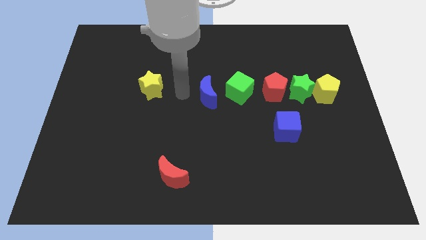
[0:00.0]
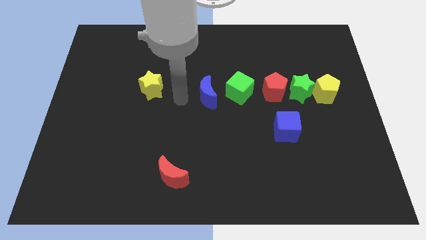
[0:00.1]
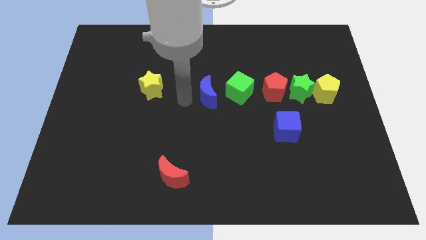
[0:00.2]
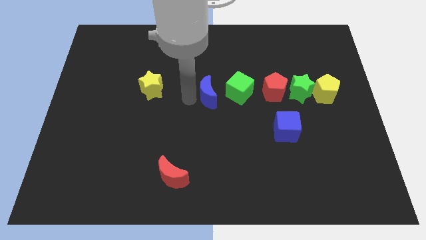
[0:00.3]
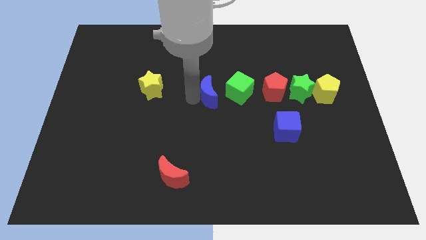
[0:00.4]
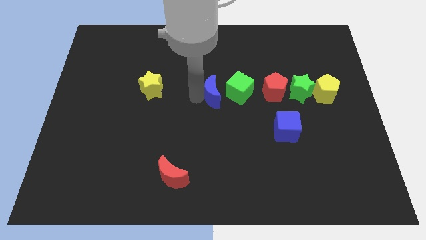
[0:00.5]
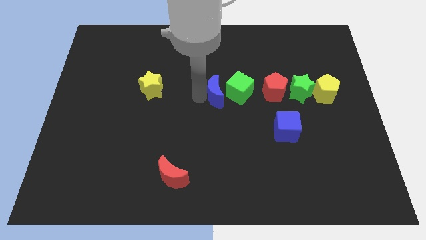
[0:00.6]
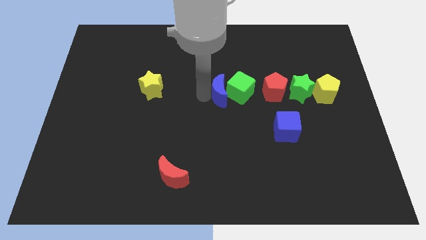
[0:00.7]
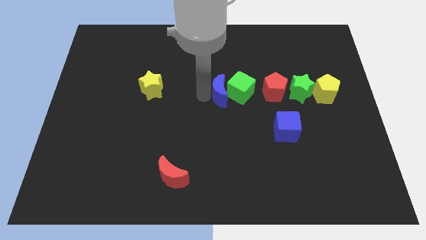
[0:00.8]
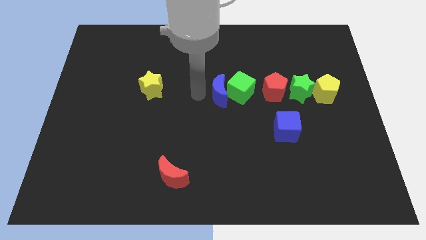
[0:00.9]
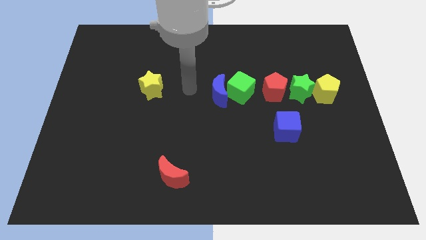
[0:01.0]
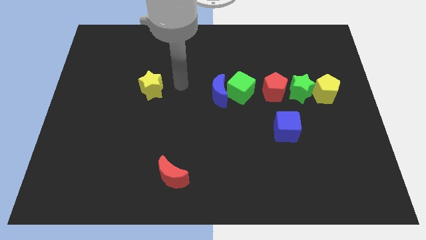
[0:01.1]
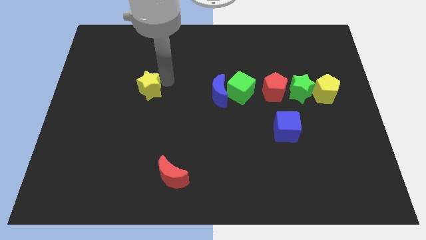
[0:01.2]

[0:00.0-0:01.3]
push blue moon in to green cube

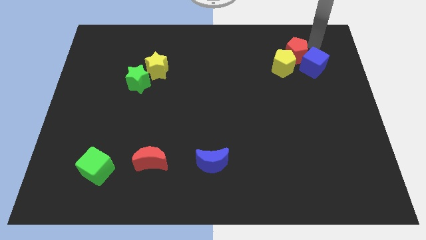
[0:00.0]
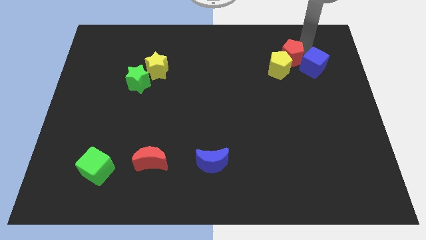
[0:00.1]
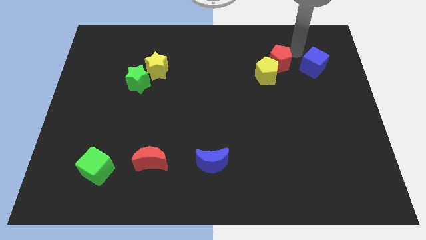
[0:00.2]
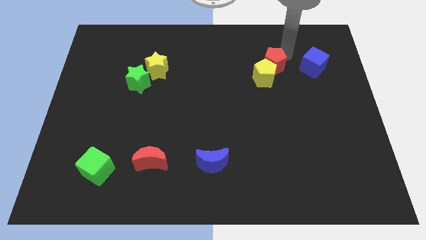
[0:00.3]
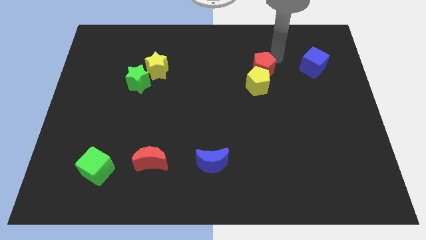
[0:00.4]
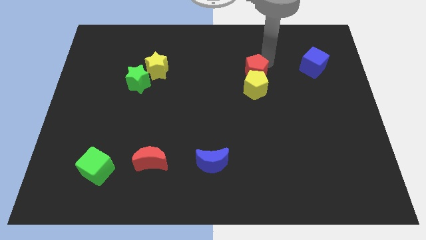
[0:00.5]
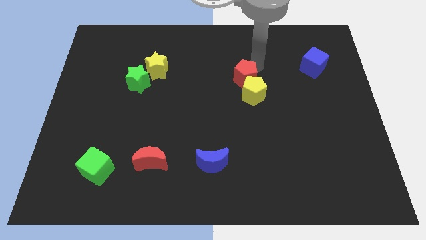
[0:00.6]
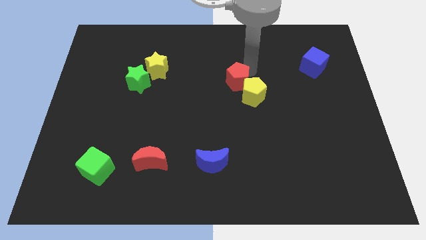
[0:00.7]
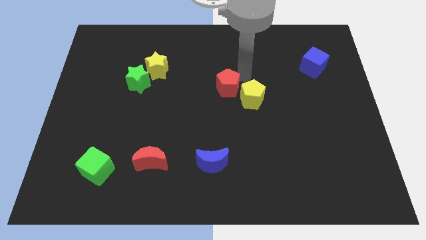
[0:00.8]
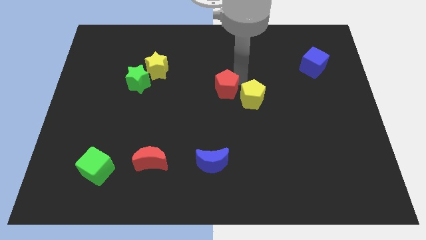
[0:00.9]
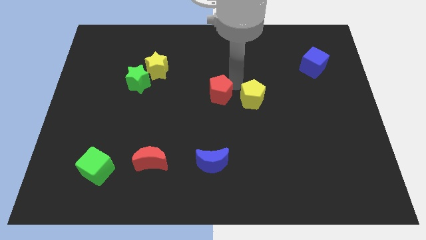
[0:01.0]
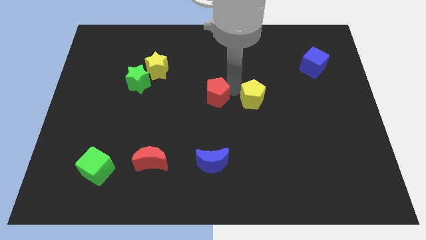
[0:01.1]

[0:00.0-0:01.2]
push the red pentagon along with the yellow pentagon to the bottom

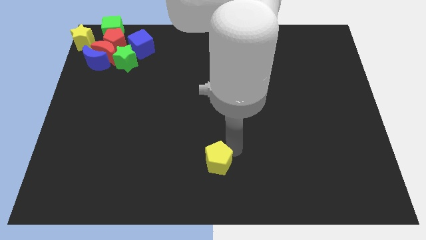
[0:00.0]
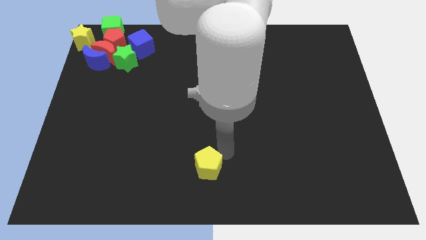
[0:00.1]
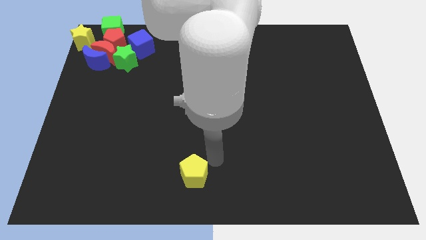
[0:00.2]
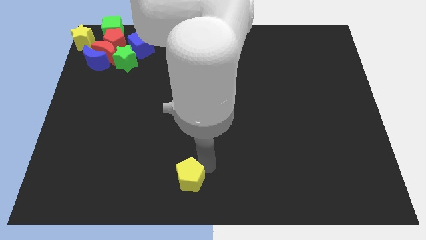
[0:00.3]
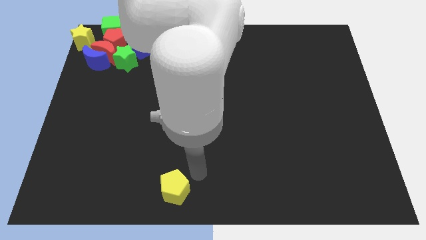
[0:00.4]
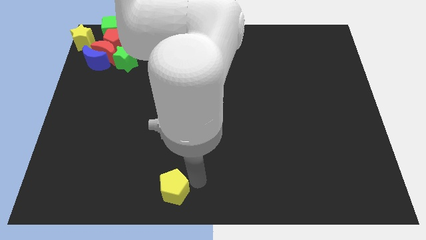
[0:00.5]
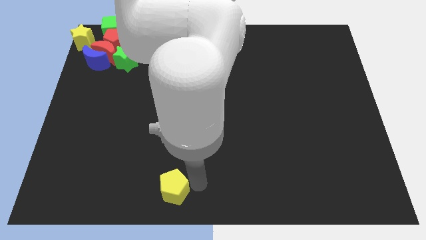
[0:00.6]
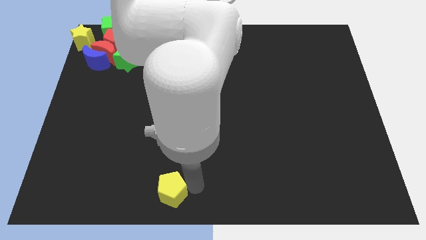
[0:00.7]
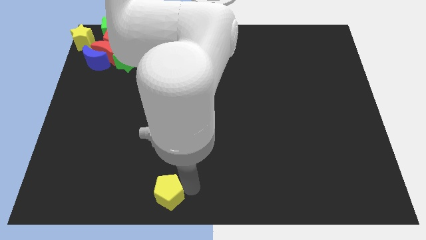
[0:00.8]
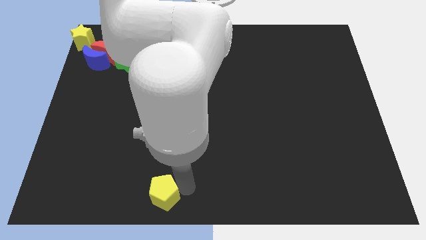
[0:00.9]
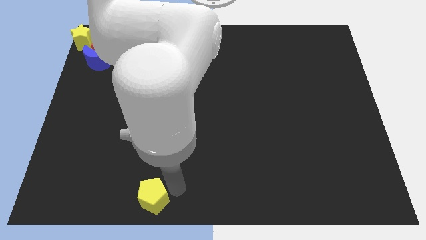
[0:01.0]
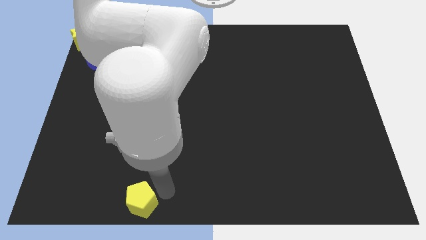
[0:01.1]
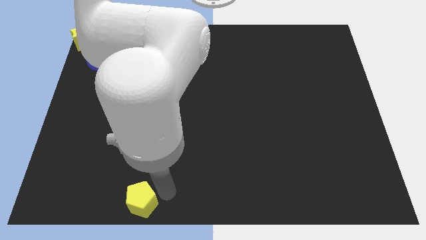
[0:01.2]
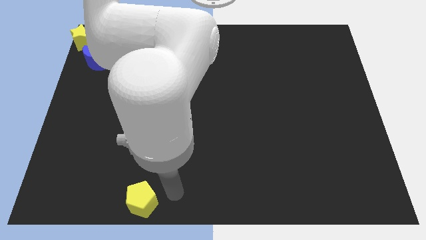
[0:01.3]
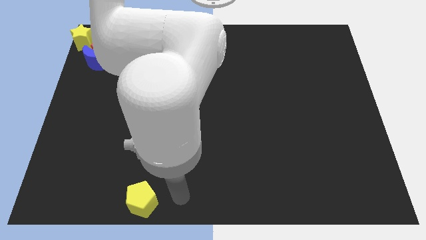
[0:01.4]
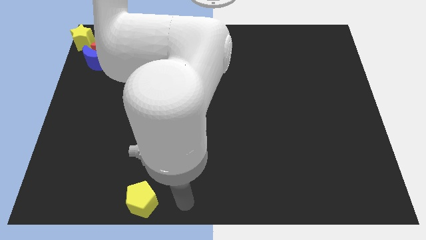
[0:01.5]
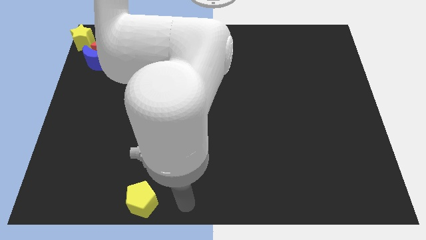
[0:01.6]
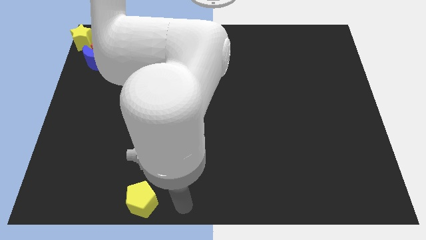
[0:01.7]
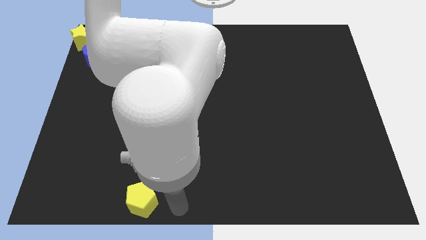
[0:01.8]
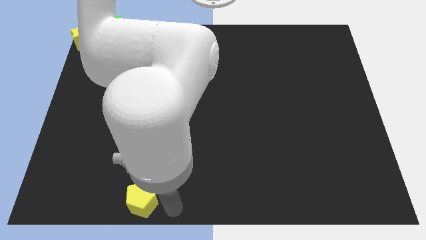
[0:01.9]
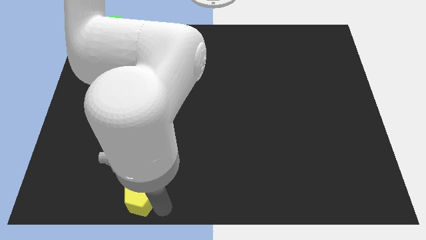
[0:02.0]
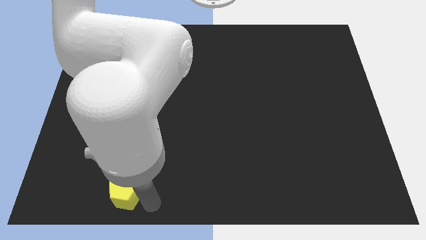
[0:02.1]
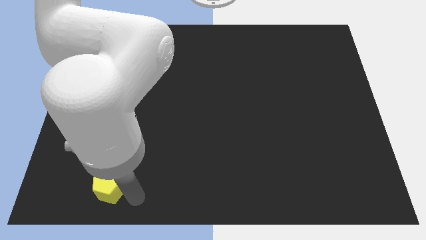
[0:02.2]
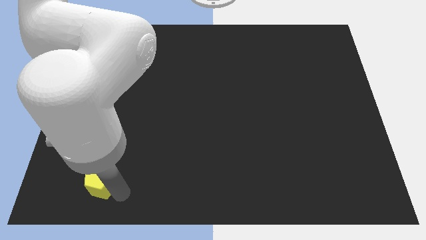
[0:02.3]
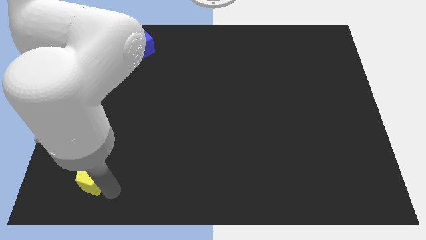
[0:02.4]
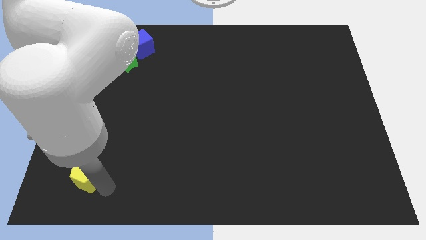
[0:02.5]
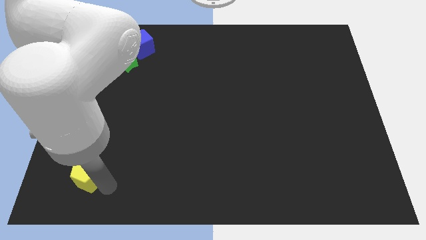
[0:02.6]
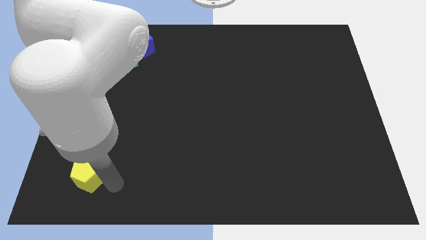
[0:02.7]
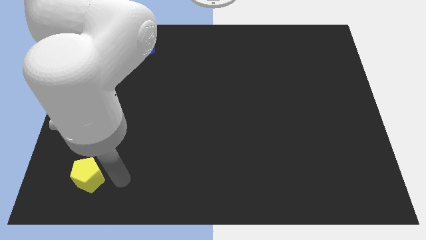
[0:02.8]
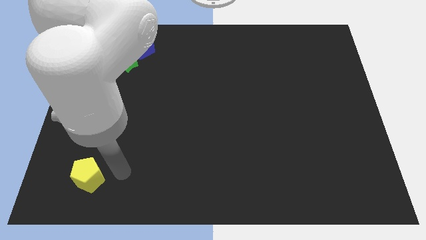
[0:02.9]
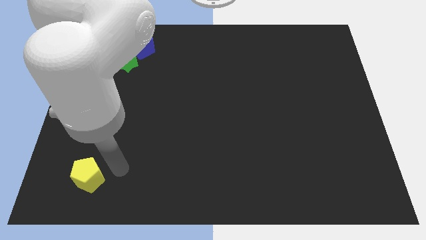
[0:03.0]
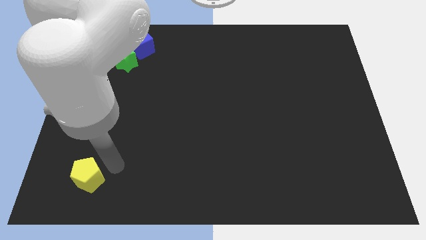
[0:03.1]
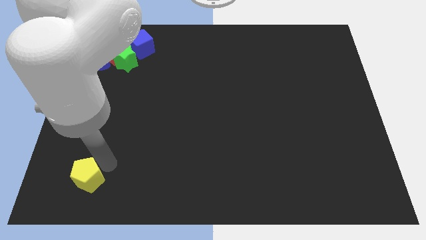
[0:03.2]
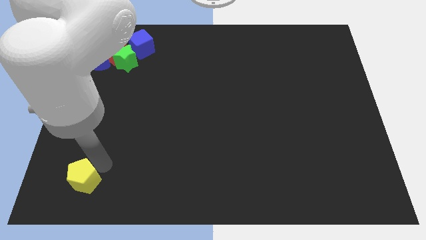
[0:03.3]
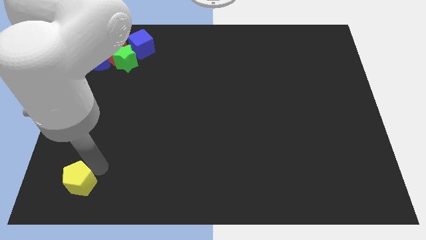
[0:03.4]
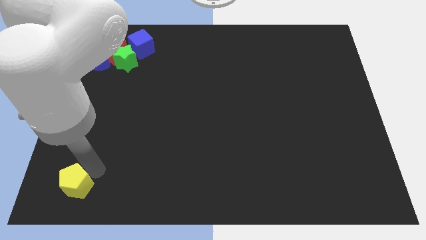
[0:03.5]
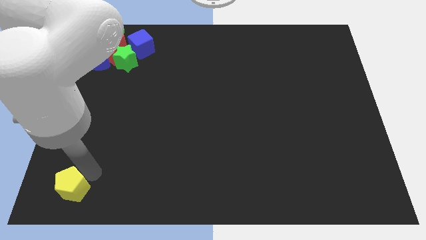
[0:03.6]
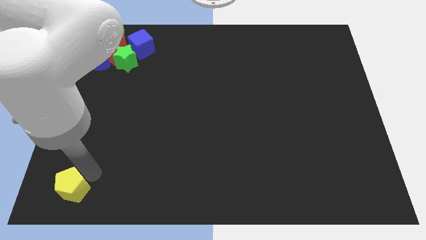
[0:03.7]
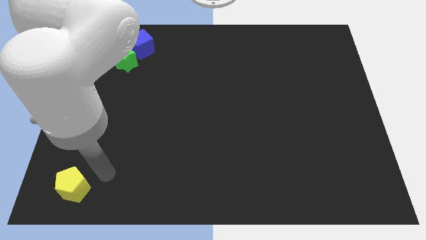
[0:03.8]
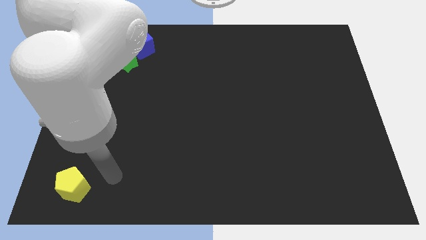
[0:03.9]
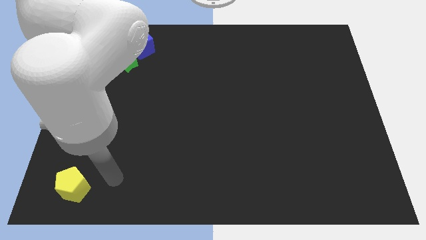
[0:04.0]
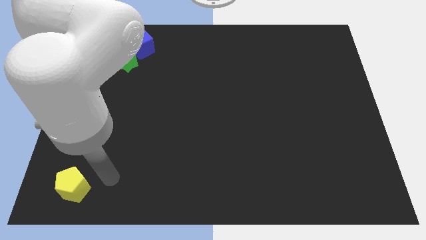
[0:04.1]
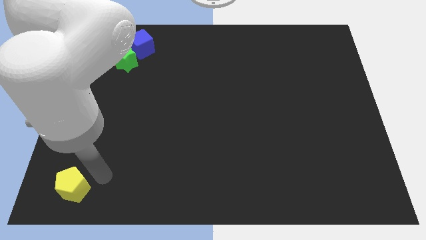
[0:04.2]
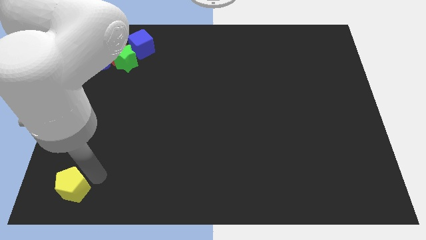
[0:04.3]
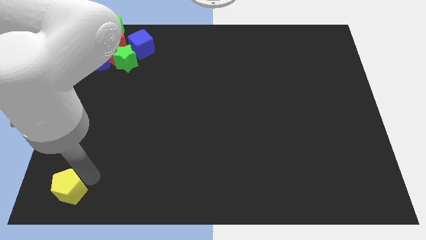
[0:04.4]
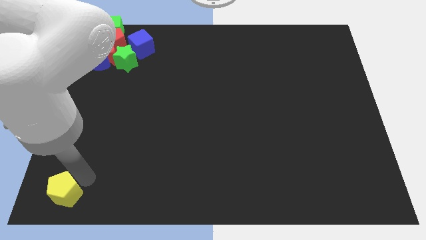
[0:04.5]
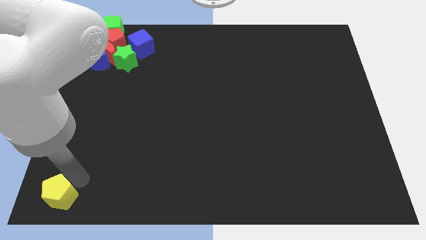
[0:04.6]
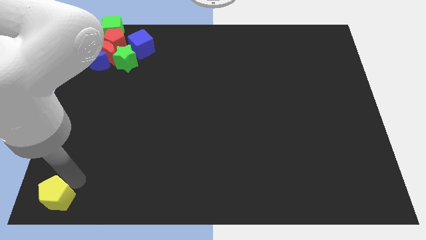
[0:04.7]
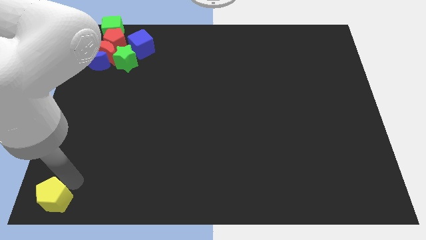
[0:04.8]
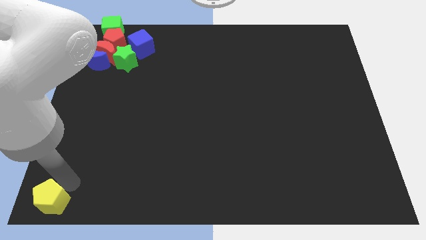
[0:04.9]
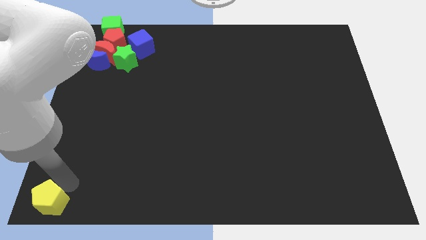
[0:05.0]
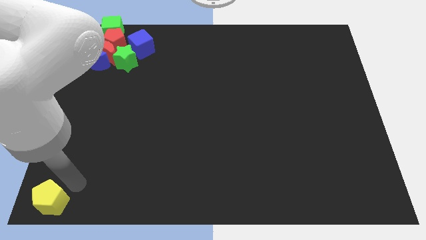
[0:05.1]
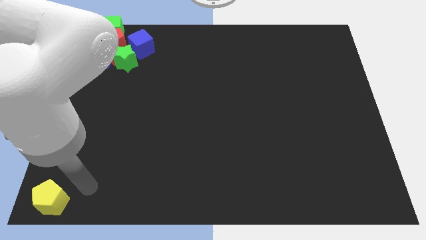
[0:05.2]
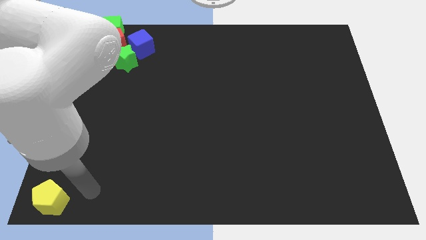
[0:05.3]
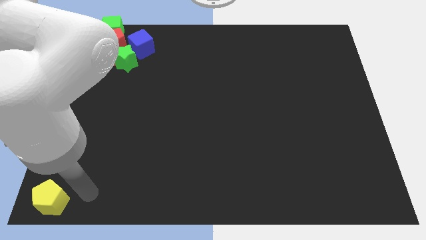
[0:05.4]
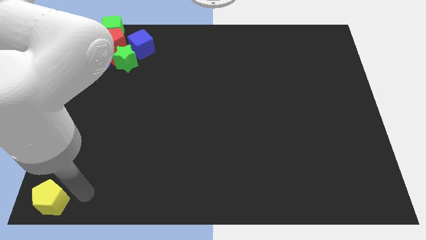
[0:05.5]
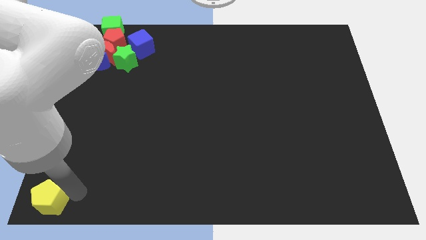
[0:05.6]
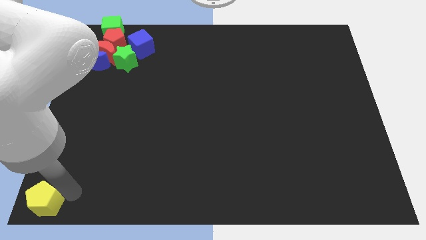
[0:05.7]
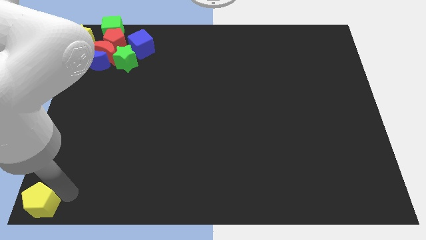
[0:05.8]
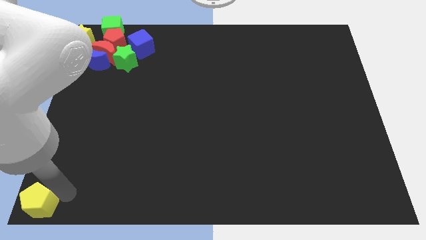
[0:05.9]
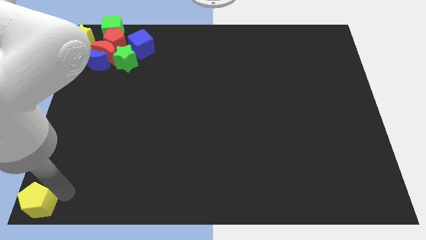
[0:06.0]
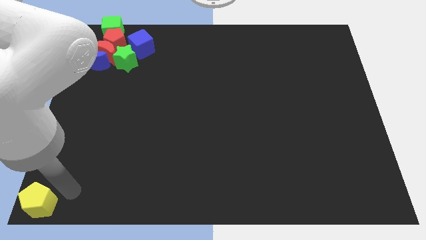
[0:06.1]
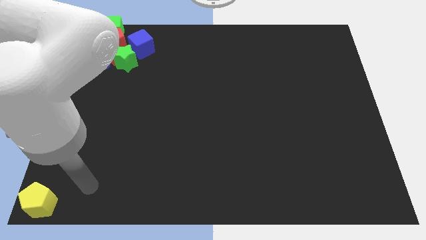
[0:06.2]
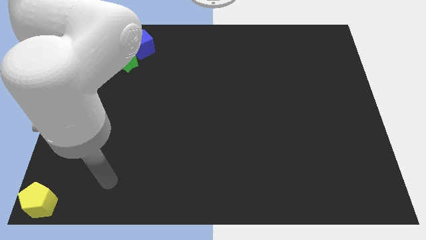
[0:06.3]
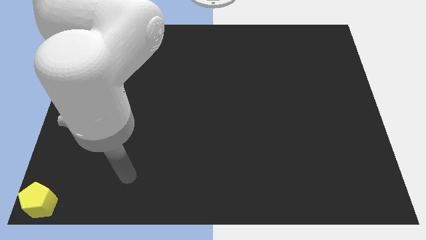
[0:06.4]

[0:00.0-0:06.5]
push the yellow pentagon to the bottom left corner of the board

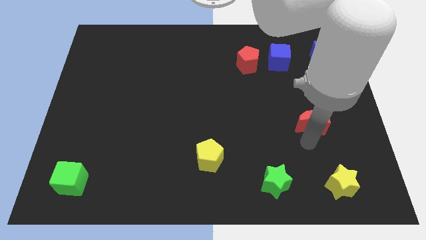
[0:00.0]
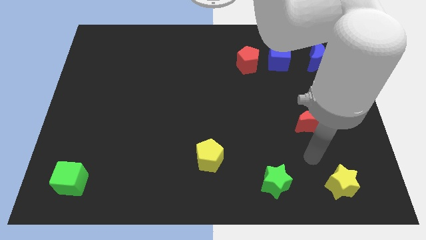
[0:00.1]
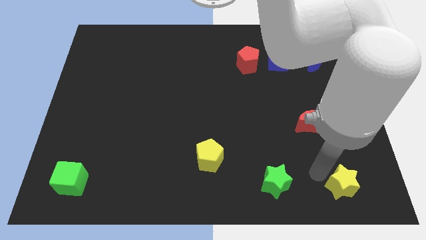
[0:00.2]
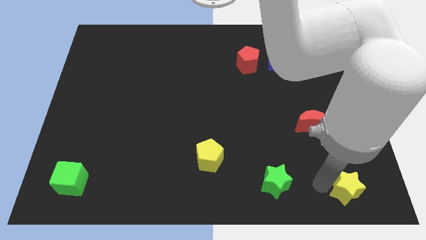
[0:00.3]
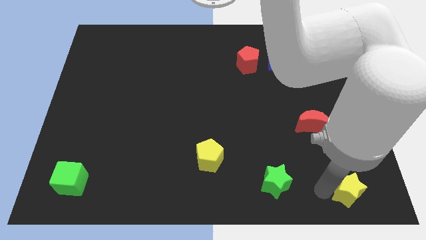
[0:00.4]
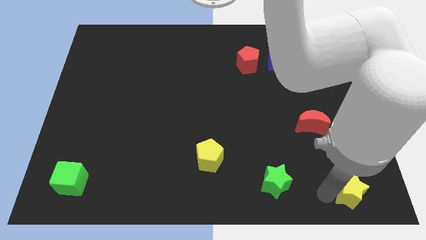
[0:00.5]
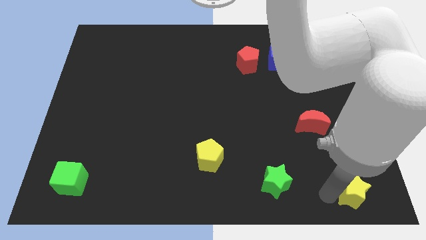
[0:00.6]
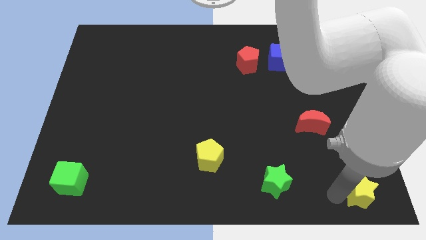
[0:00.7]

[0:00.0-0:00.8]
push the yellow star towards the right bottom corner of the board
